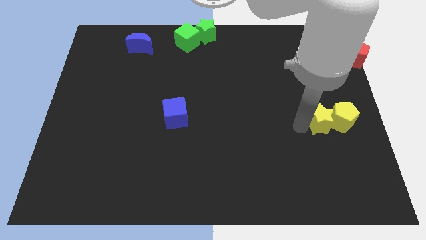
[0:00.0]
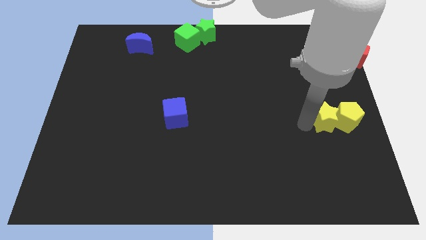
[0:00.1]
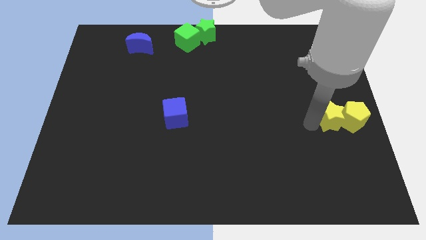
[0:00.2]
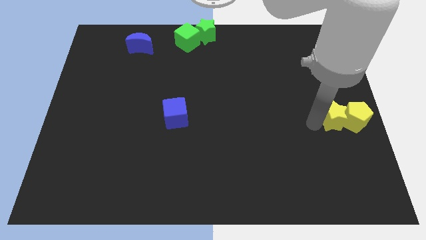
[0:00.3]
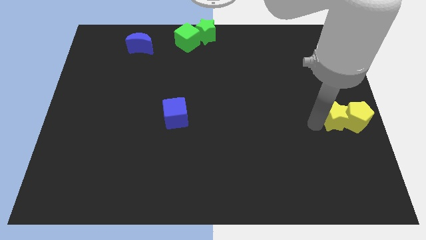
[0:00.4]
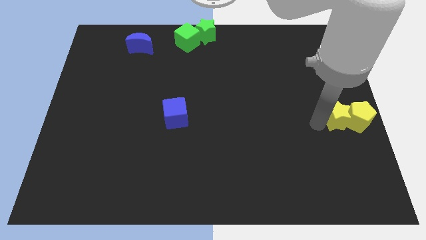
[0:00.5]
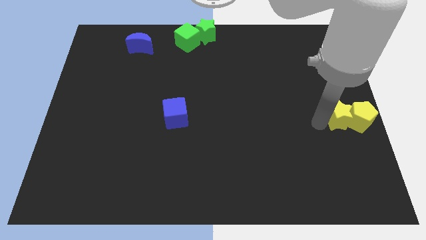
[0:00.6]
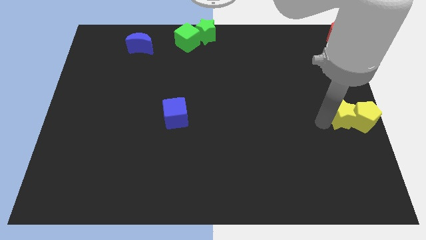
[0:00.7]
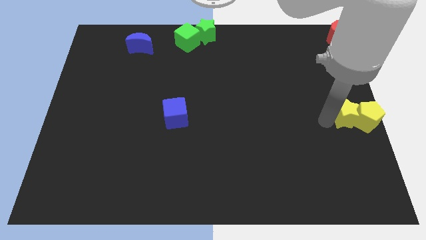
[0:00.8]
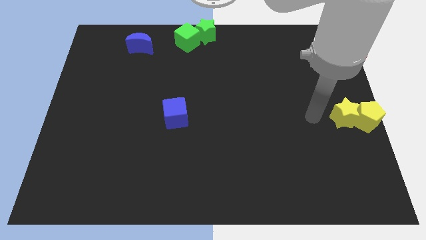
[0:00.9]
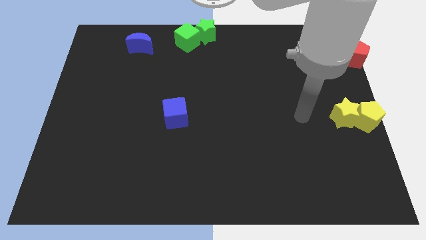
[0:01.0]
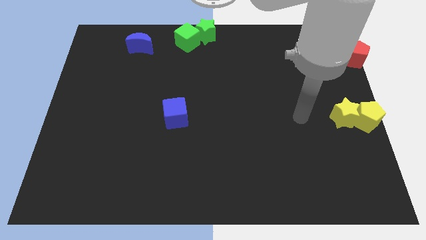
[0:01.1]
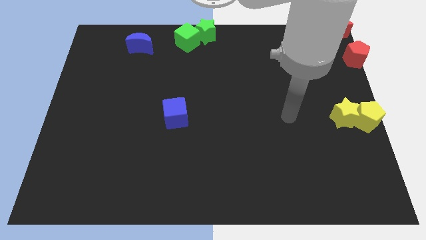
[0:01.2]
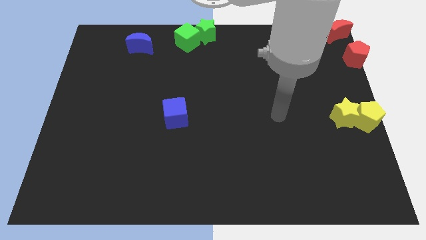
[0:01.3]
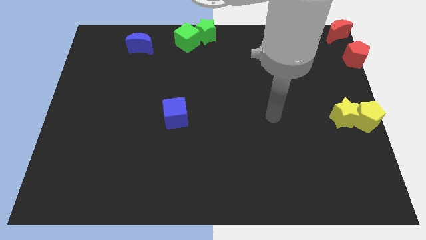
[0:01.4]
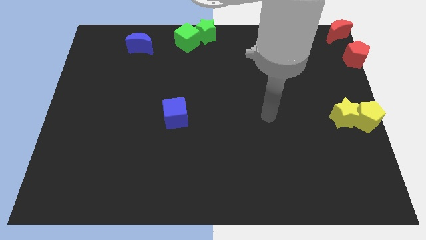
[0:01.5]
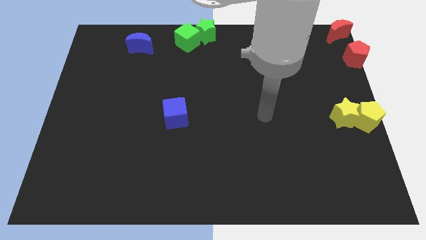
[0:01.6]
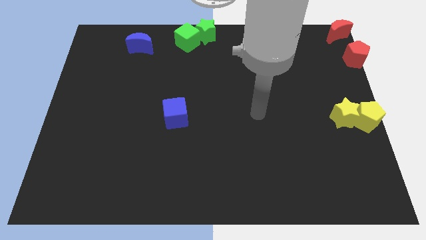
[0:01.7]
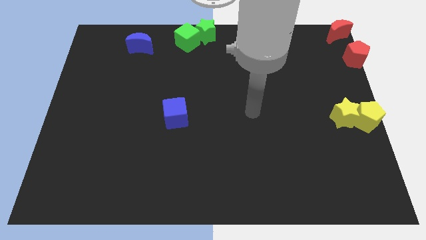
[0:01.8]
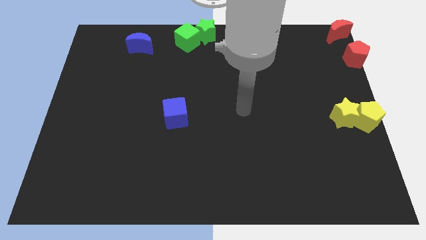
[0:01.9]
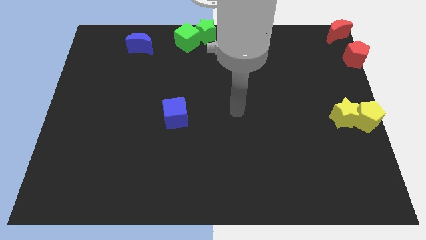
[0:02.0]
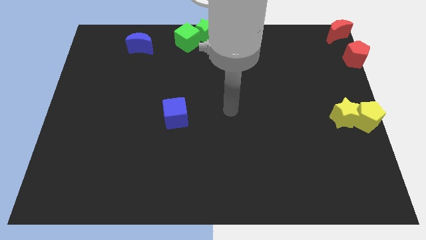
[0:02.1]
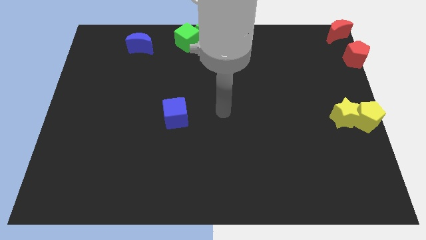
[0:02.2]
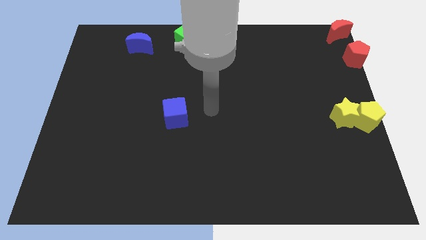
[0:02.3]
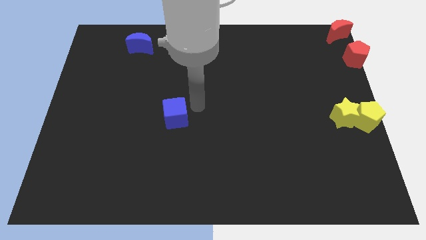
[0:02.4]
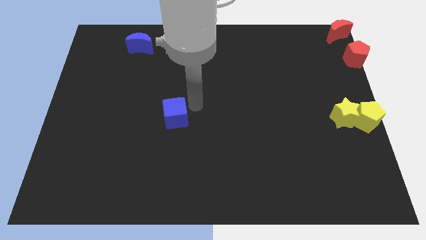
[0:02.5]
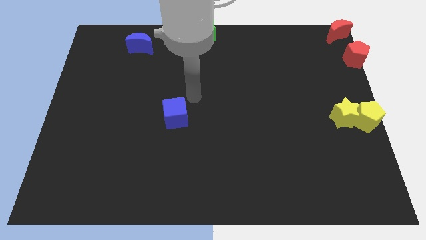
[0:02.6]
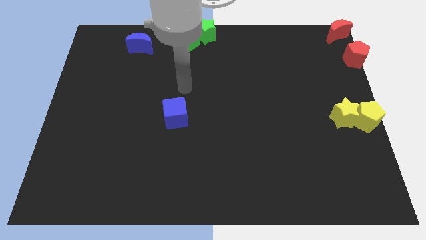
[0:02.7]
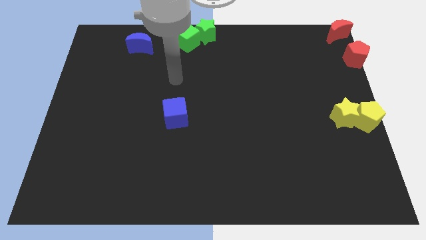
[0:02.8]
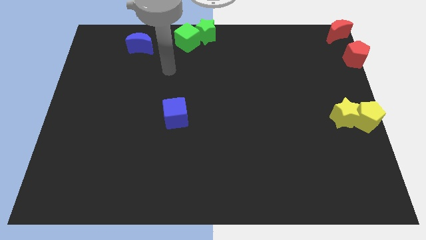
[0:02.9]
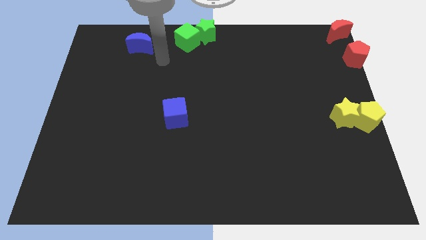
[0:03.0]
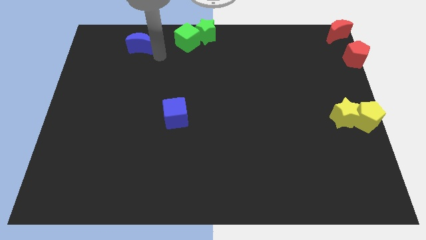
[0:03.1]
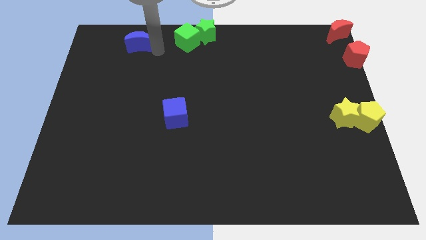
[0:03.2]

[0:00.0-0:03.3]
move your arm towards the blue crescent

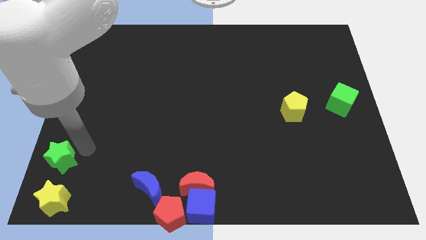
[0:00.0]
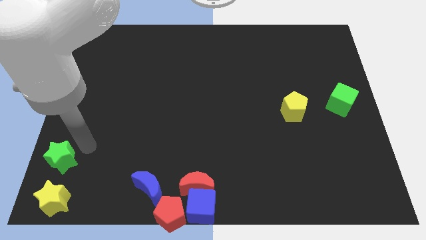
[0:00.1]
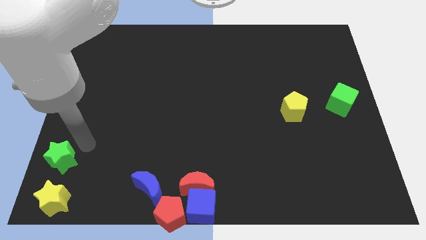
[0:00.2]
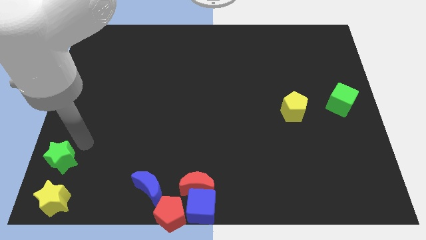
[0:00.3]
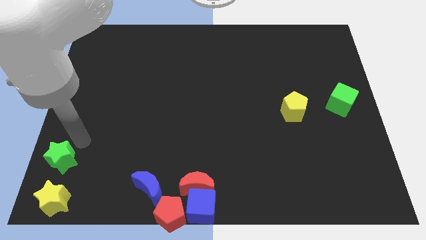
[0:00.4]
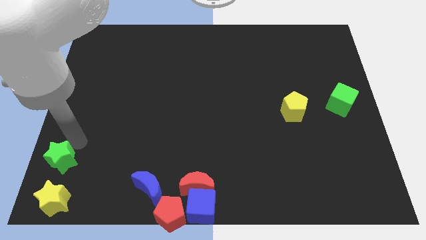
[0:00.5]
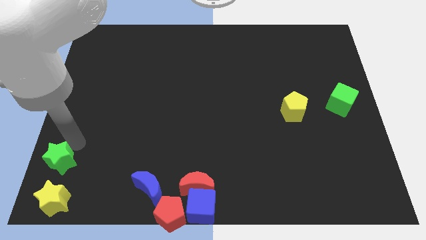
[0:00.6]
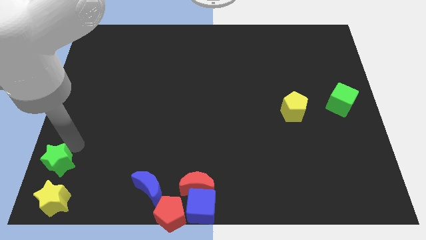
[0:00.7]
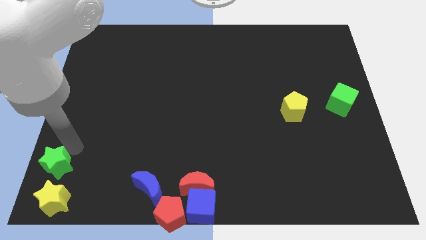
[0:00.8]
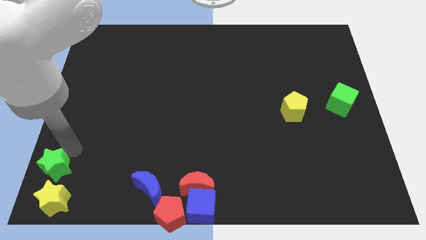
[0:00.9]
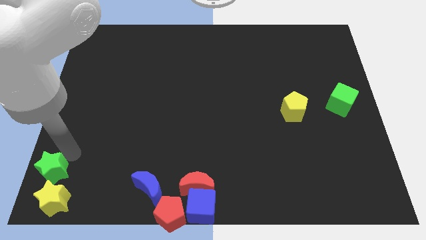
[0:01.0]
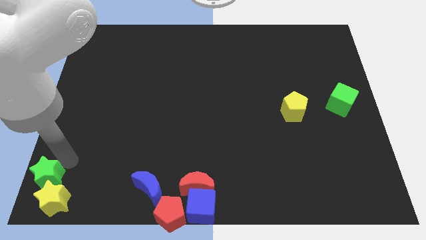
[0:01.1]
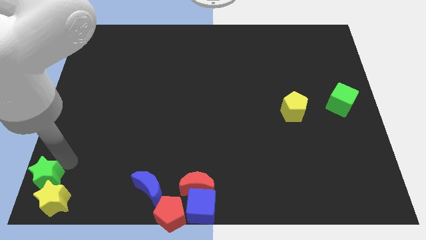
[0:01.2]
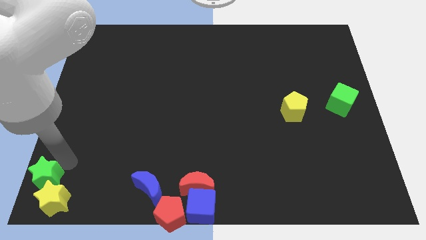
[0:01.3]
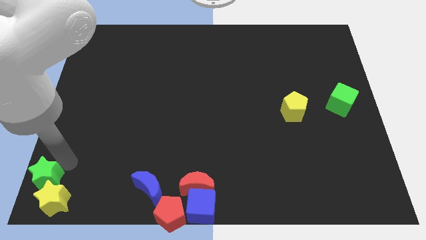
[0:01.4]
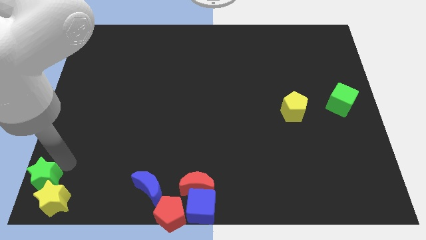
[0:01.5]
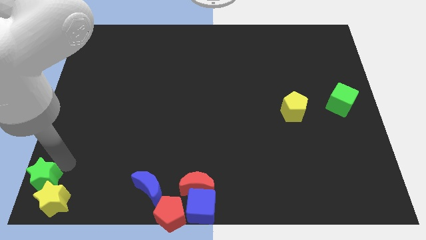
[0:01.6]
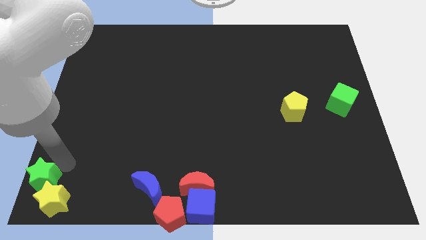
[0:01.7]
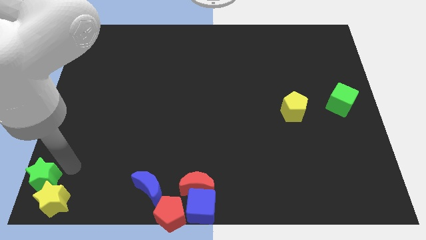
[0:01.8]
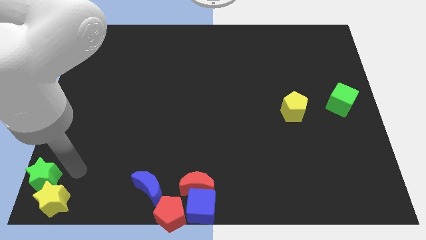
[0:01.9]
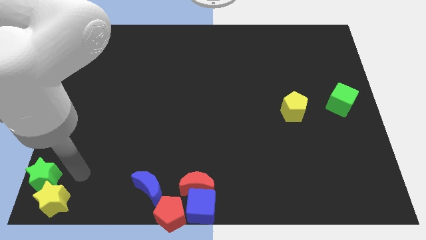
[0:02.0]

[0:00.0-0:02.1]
move green star towards the bottom left corner

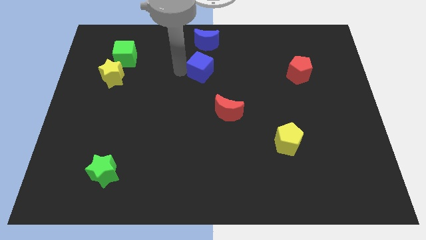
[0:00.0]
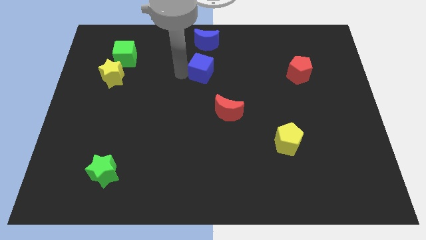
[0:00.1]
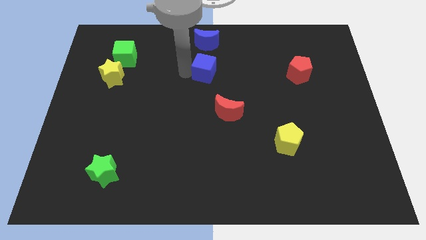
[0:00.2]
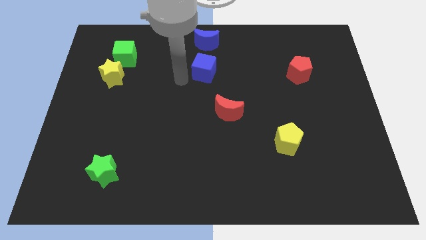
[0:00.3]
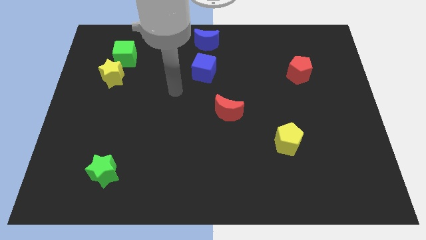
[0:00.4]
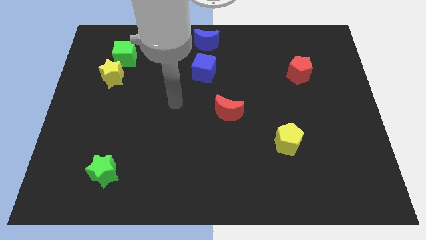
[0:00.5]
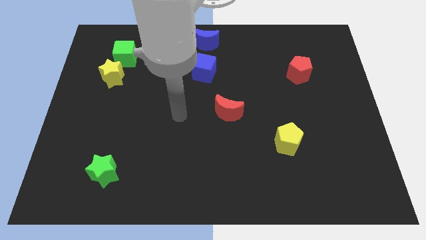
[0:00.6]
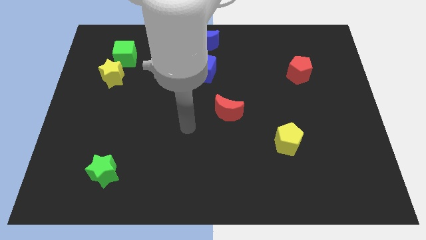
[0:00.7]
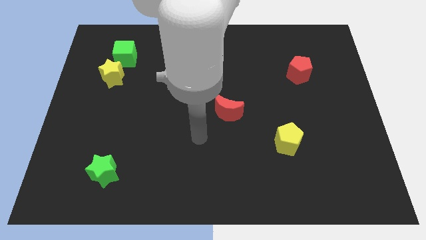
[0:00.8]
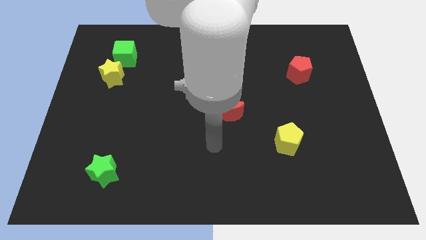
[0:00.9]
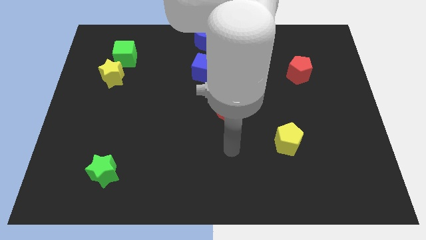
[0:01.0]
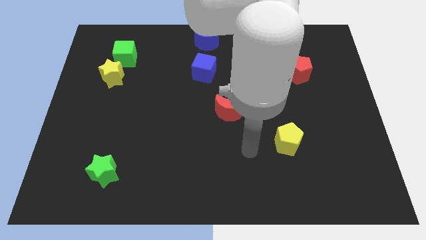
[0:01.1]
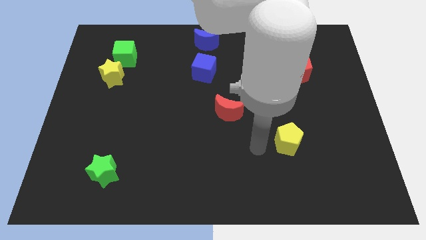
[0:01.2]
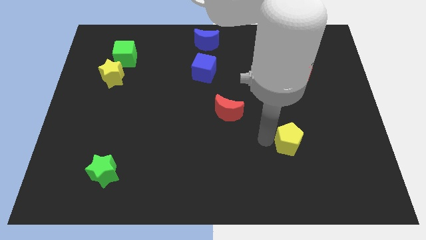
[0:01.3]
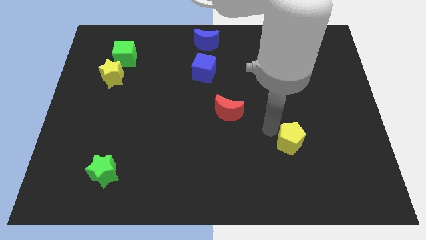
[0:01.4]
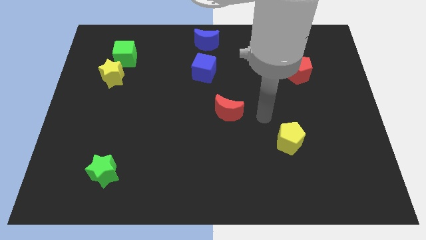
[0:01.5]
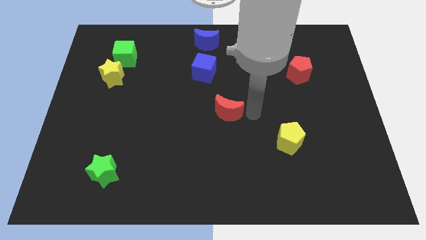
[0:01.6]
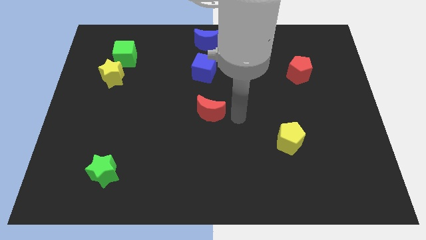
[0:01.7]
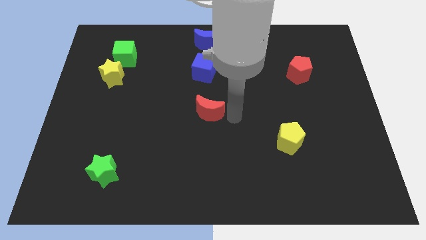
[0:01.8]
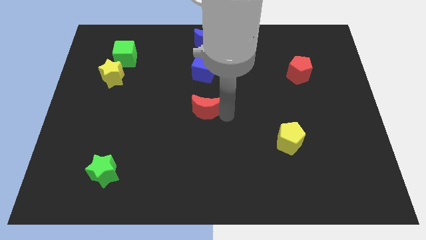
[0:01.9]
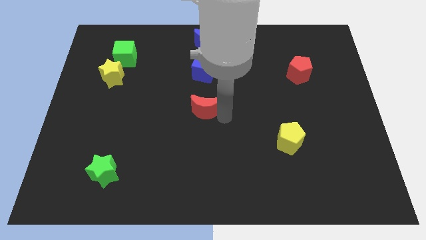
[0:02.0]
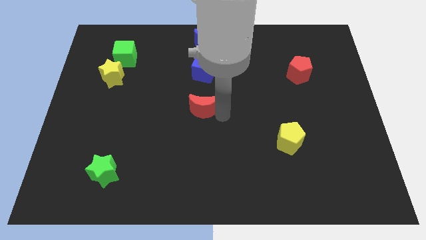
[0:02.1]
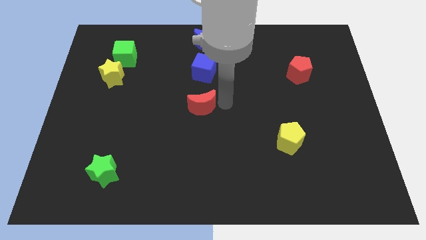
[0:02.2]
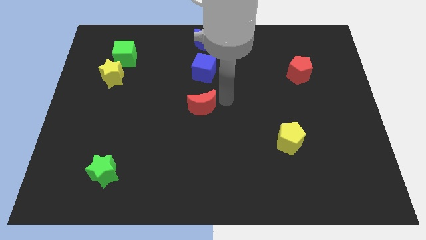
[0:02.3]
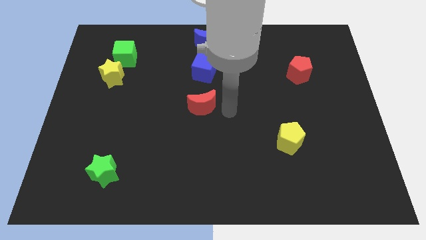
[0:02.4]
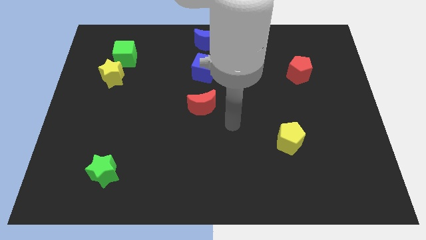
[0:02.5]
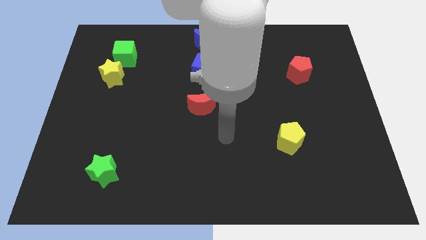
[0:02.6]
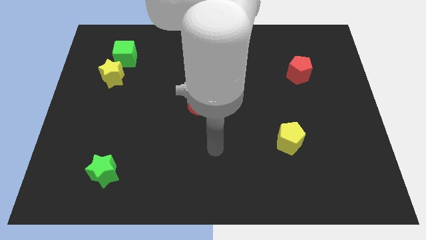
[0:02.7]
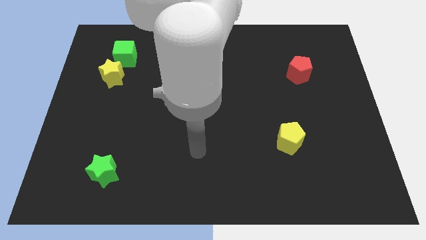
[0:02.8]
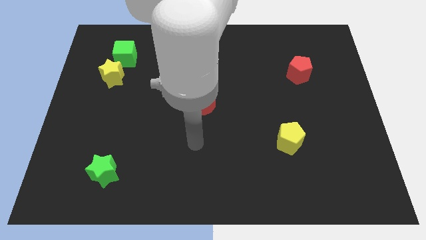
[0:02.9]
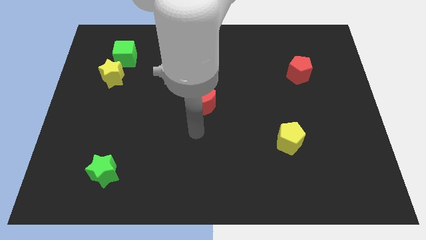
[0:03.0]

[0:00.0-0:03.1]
move the red moon to the bottom of the blue cube

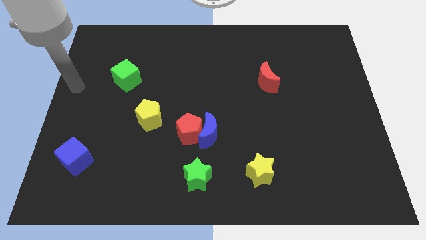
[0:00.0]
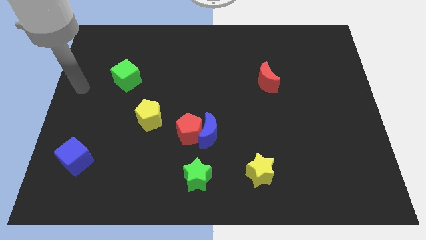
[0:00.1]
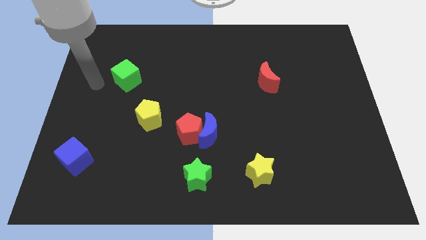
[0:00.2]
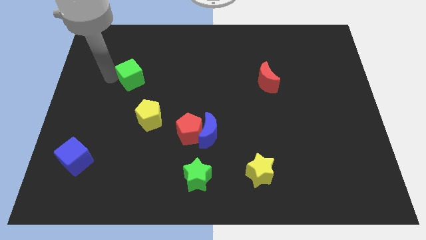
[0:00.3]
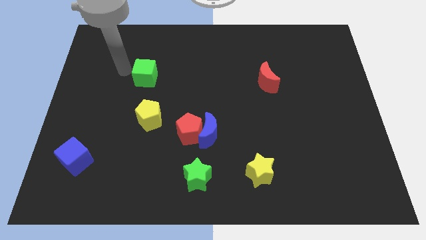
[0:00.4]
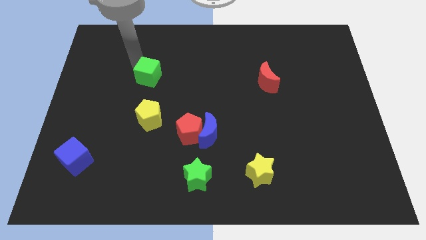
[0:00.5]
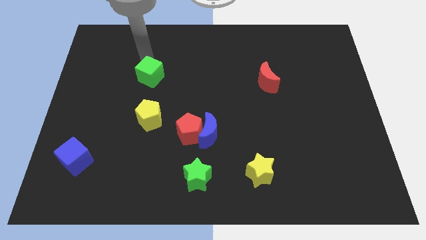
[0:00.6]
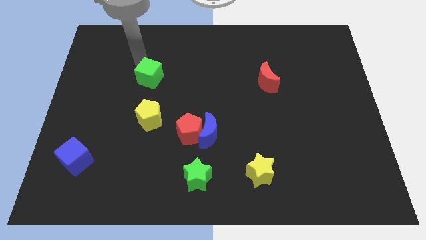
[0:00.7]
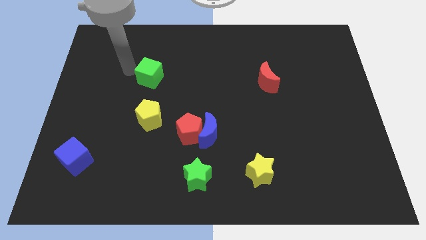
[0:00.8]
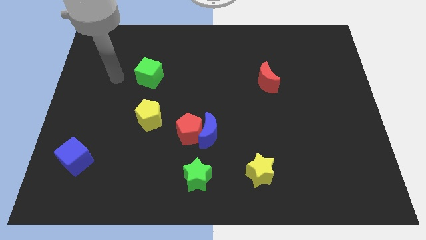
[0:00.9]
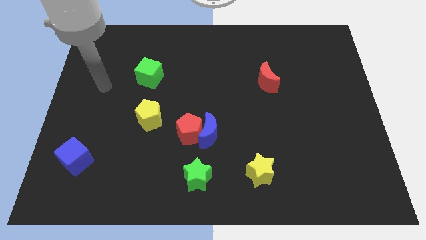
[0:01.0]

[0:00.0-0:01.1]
move the green cube at the top side of the yellow pentagon
